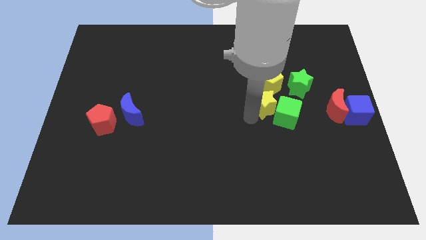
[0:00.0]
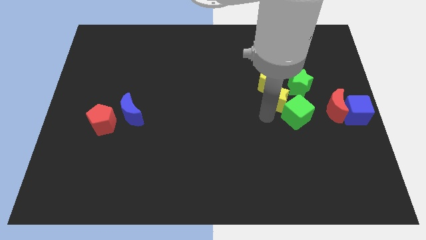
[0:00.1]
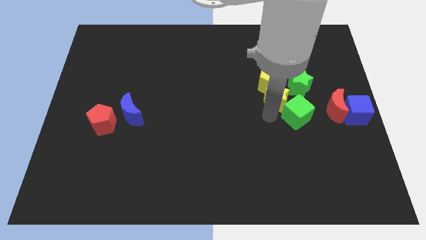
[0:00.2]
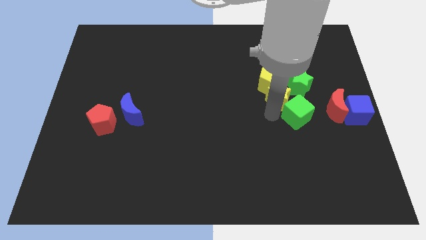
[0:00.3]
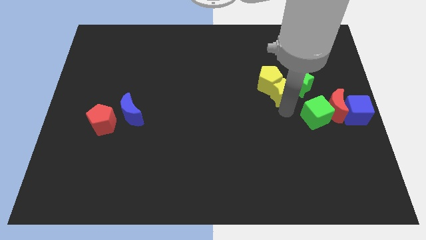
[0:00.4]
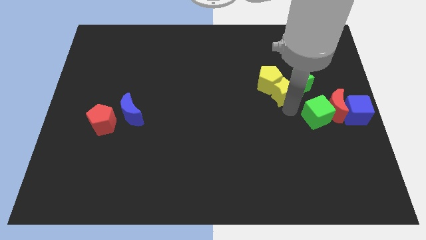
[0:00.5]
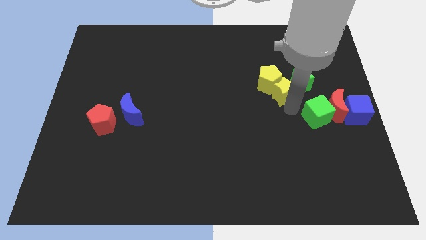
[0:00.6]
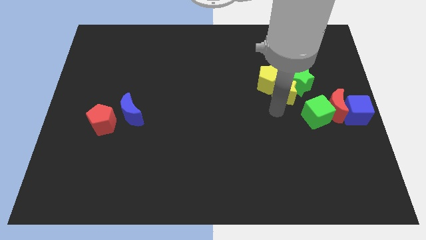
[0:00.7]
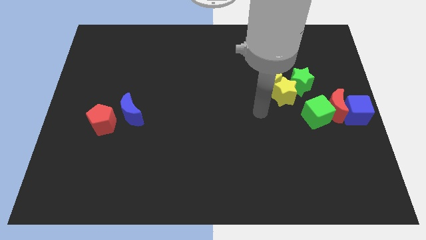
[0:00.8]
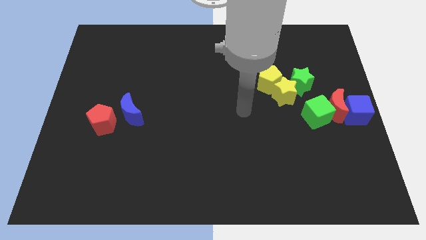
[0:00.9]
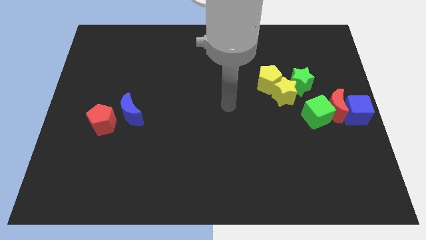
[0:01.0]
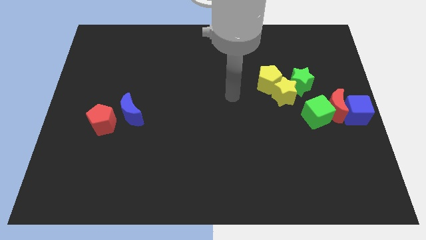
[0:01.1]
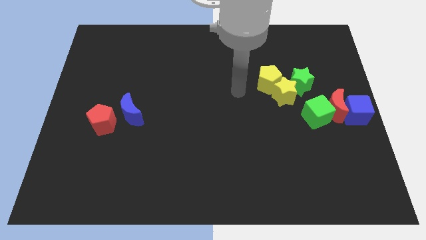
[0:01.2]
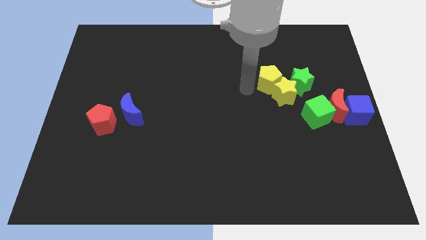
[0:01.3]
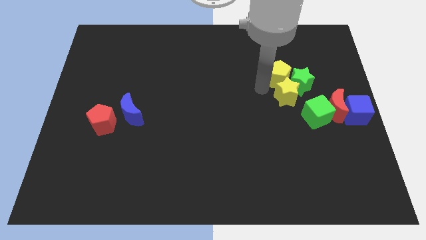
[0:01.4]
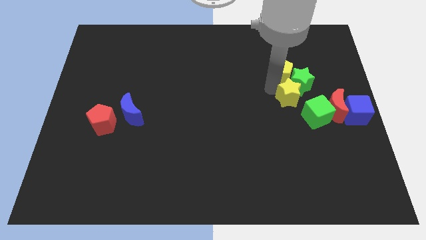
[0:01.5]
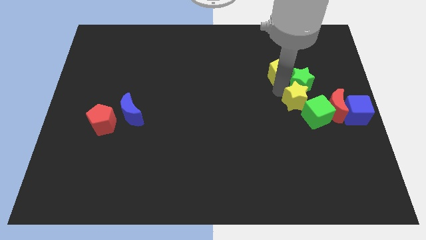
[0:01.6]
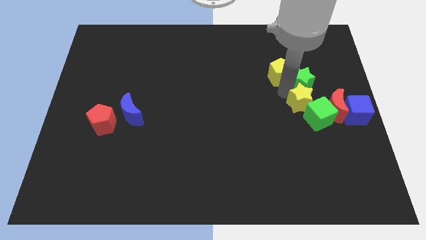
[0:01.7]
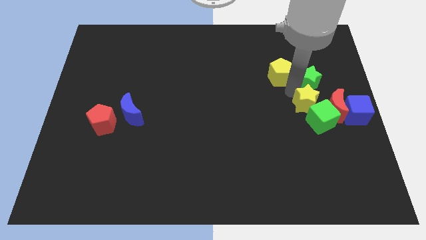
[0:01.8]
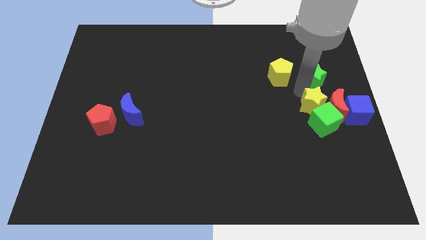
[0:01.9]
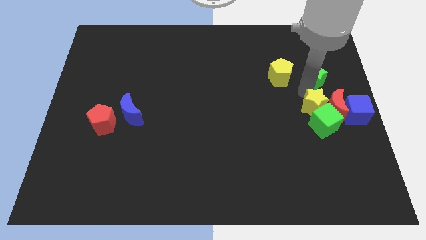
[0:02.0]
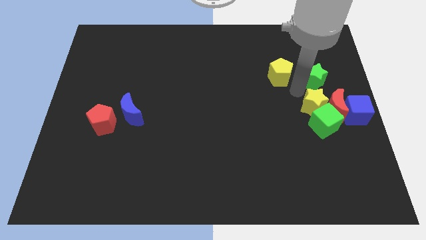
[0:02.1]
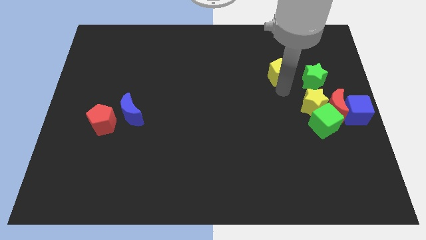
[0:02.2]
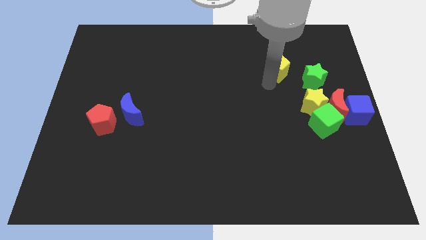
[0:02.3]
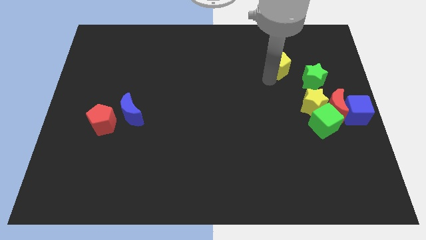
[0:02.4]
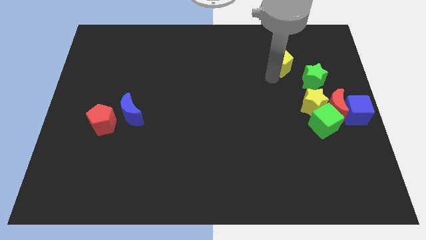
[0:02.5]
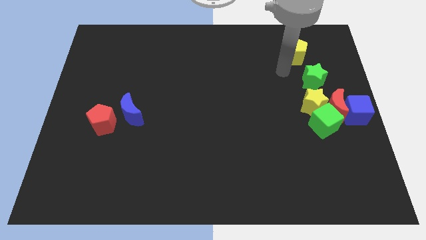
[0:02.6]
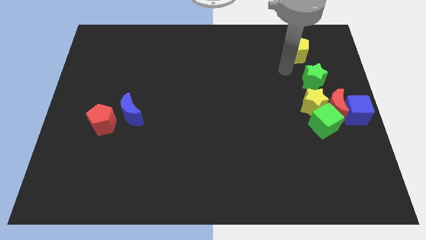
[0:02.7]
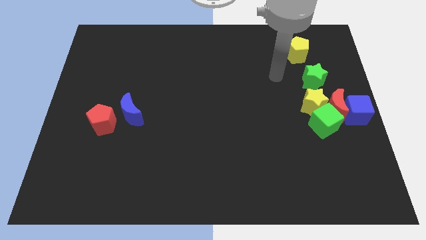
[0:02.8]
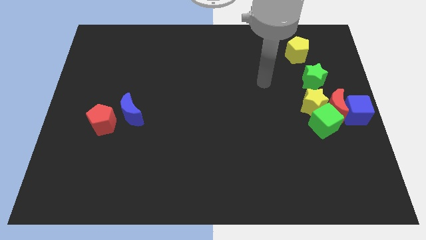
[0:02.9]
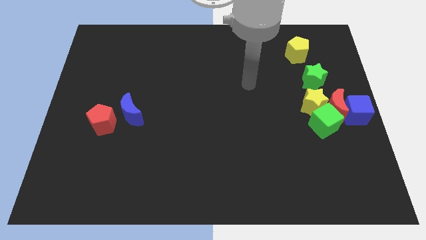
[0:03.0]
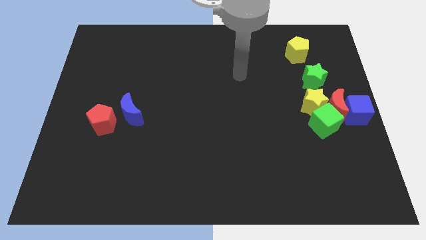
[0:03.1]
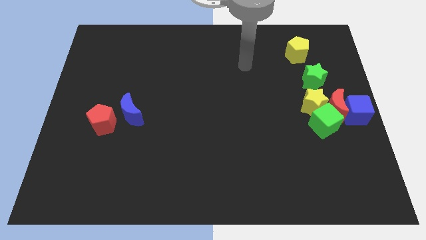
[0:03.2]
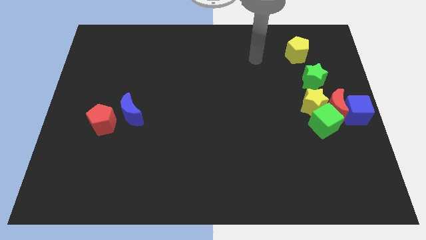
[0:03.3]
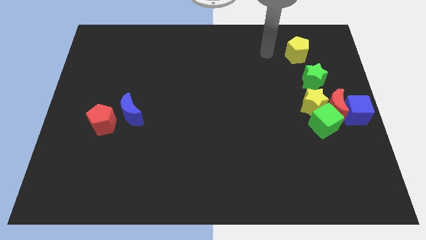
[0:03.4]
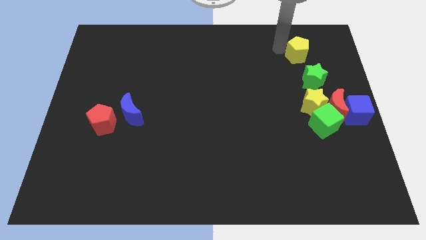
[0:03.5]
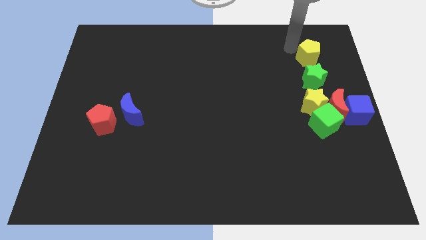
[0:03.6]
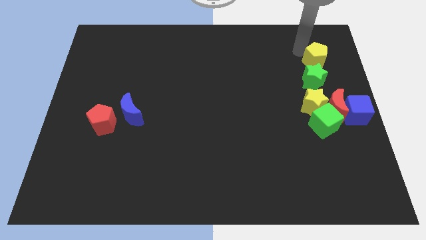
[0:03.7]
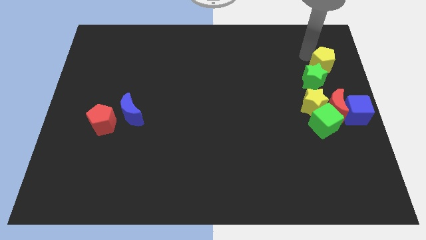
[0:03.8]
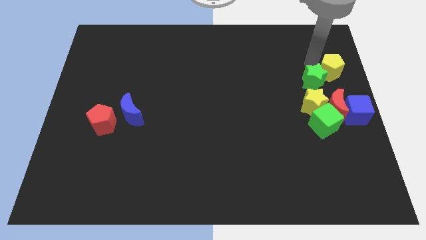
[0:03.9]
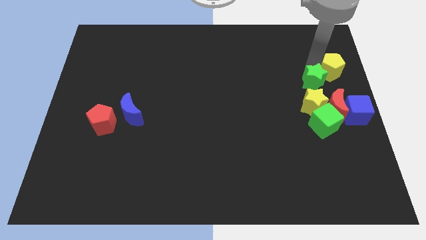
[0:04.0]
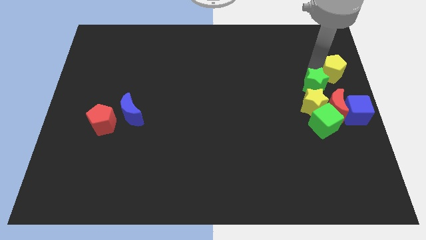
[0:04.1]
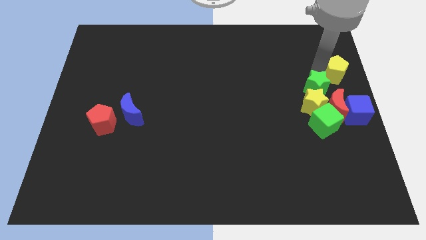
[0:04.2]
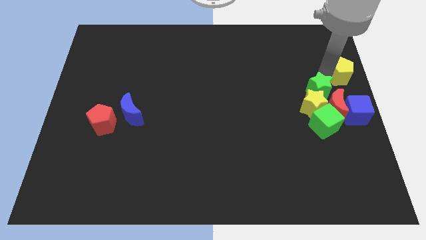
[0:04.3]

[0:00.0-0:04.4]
push a group of blocks towards the right side of the board

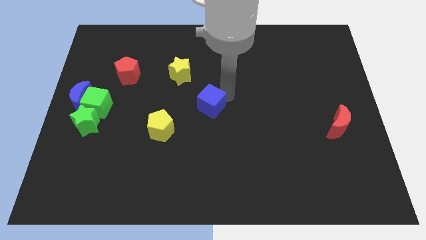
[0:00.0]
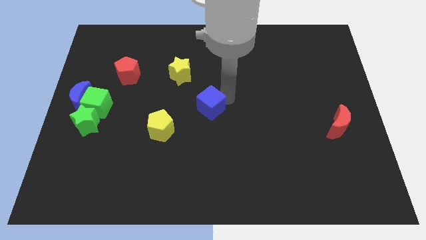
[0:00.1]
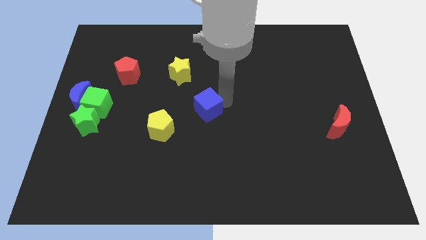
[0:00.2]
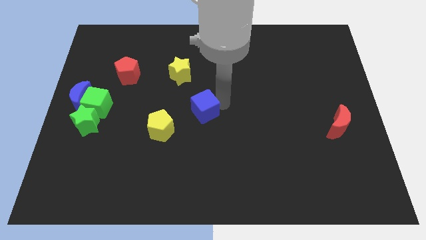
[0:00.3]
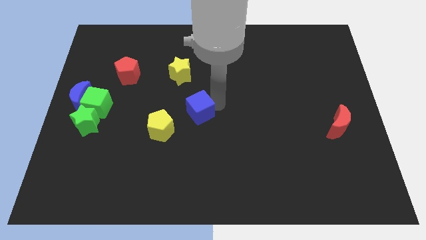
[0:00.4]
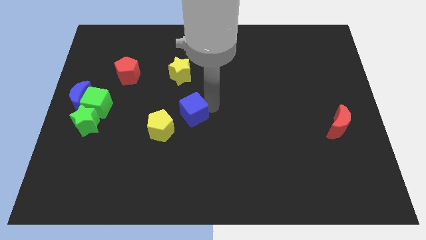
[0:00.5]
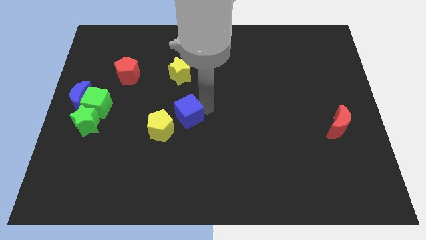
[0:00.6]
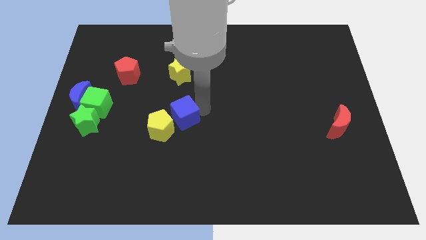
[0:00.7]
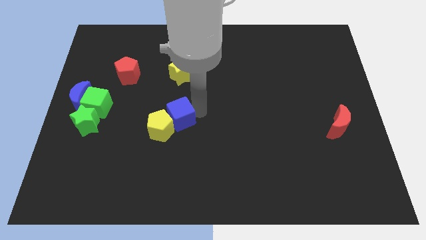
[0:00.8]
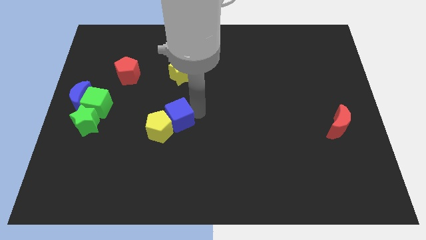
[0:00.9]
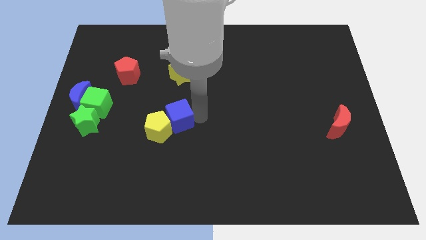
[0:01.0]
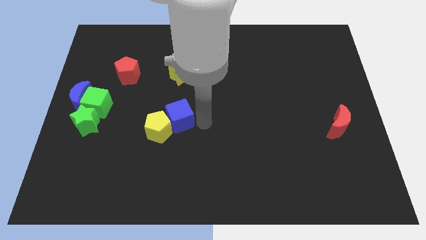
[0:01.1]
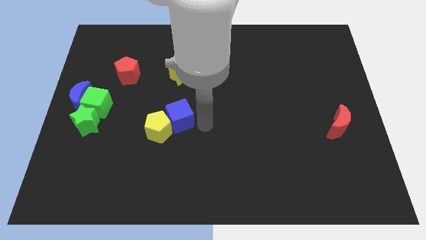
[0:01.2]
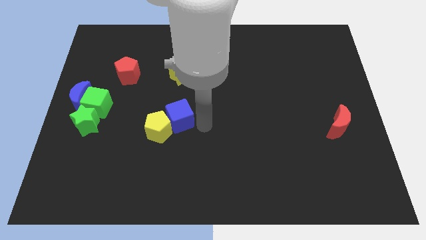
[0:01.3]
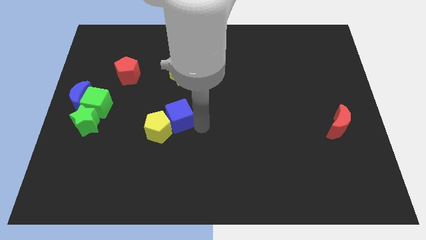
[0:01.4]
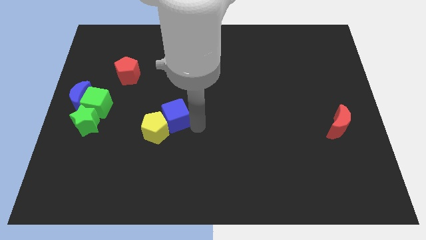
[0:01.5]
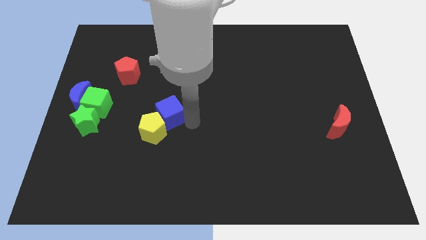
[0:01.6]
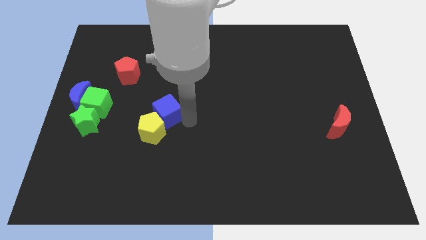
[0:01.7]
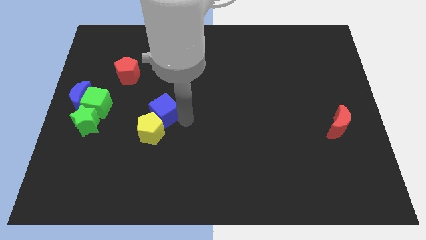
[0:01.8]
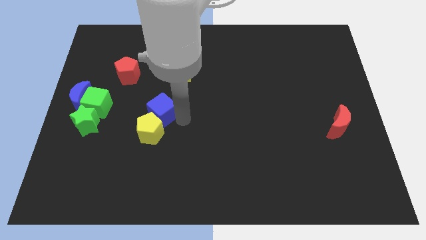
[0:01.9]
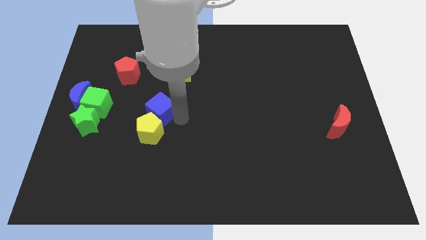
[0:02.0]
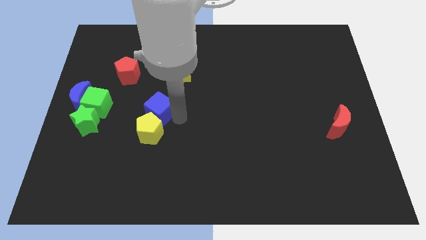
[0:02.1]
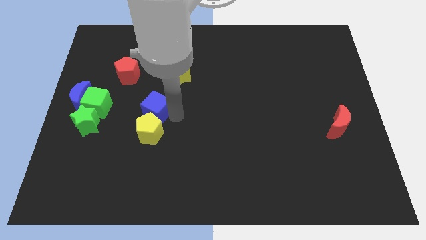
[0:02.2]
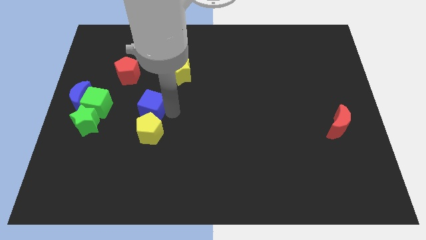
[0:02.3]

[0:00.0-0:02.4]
place the blue cube above the yellow pentagon

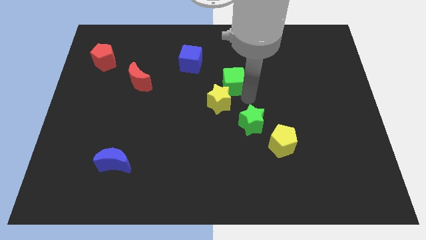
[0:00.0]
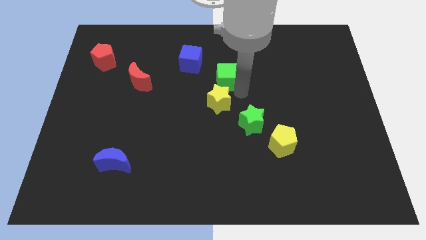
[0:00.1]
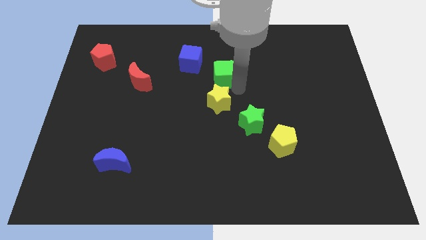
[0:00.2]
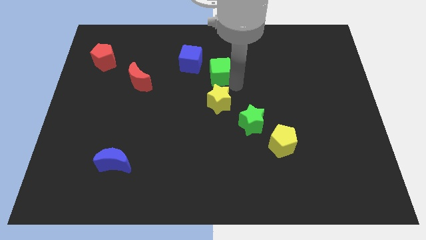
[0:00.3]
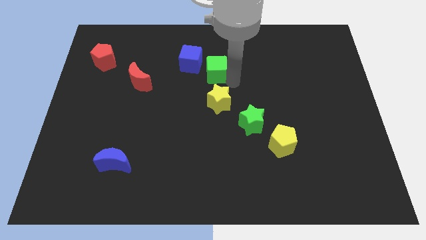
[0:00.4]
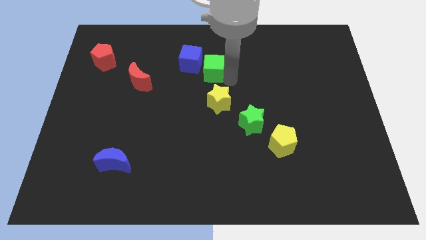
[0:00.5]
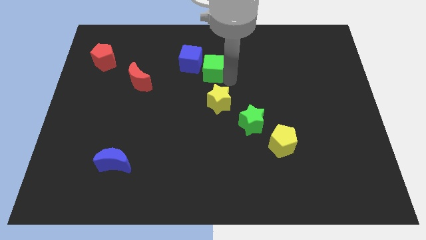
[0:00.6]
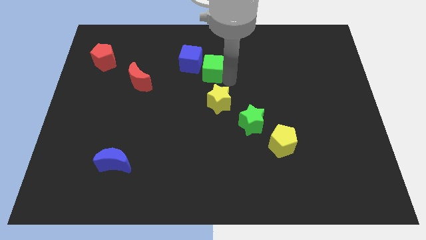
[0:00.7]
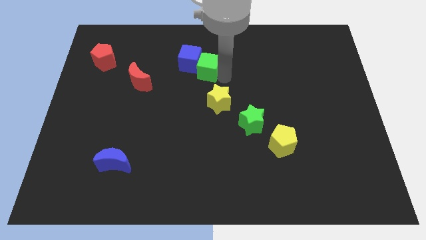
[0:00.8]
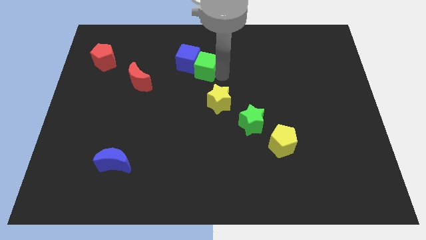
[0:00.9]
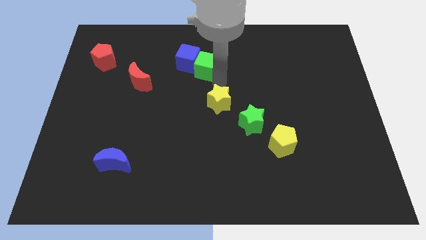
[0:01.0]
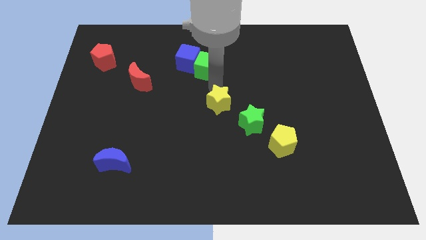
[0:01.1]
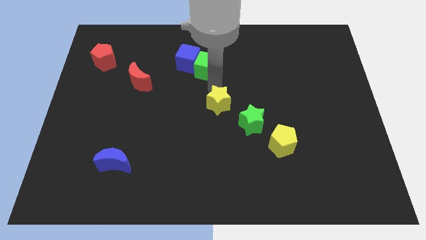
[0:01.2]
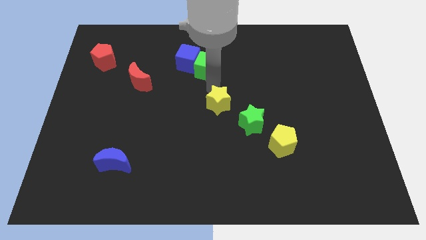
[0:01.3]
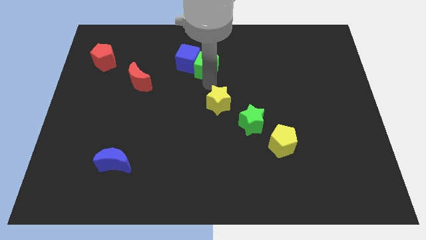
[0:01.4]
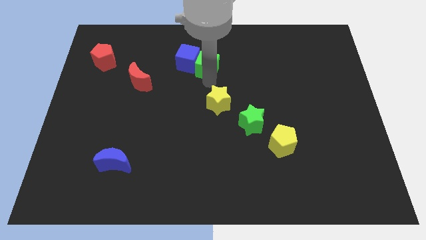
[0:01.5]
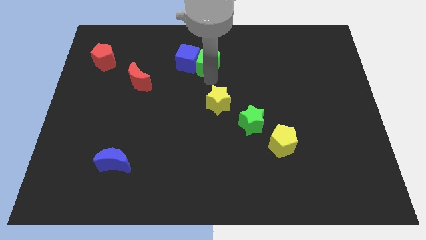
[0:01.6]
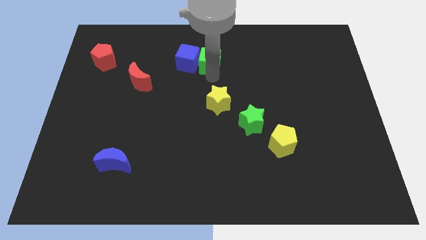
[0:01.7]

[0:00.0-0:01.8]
push the green cube into the blue cube

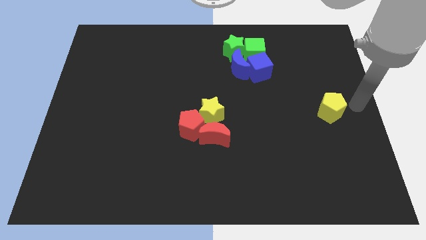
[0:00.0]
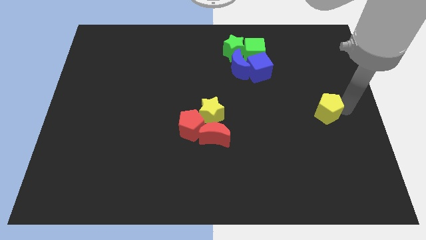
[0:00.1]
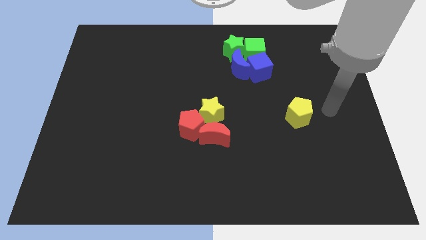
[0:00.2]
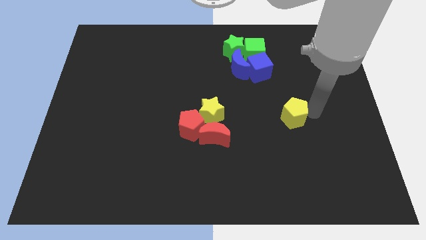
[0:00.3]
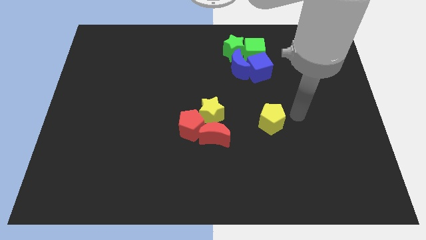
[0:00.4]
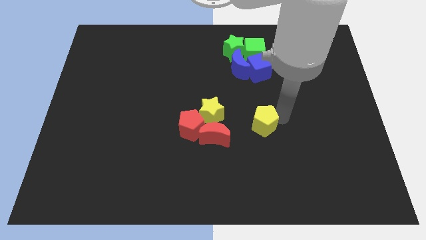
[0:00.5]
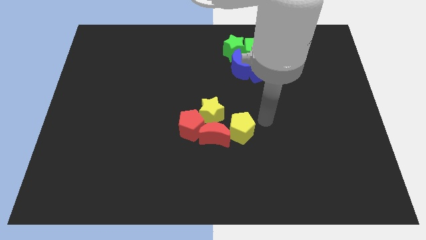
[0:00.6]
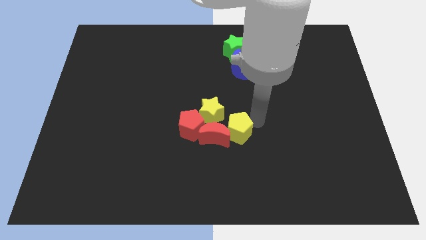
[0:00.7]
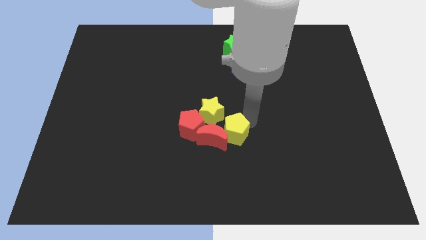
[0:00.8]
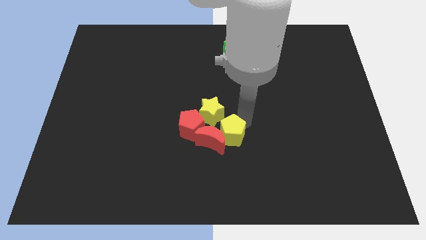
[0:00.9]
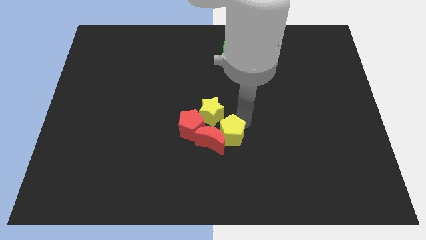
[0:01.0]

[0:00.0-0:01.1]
push the yellow pentagon right to the red crescent
